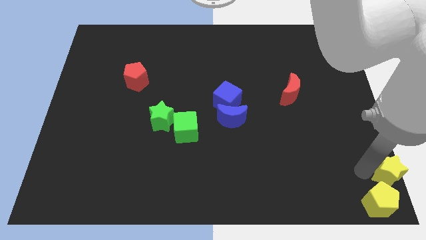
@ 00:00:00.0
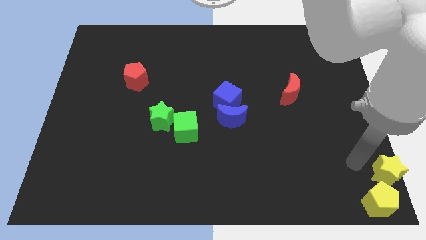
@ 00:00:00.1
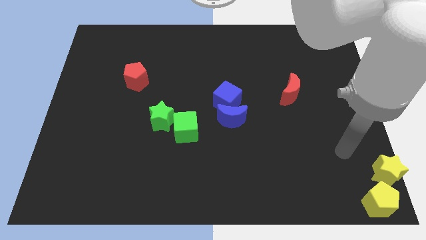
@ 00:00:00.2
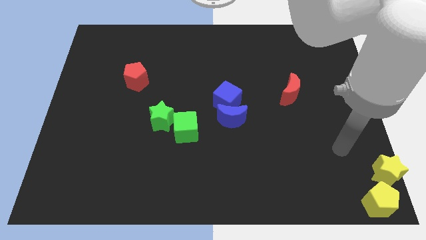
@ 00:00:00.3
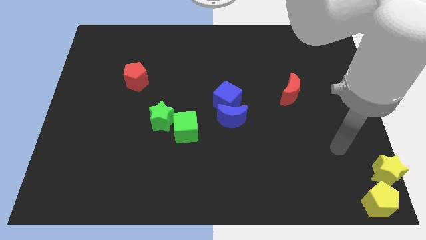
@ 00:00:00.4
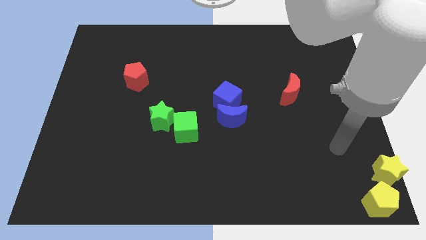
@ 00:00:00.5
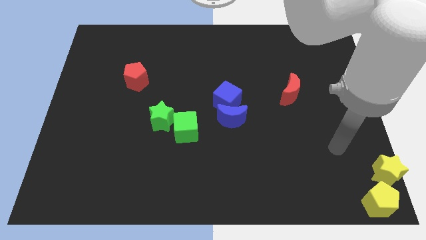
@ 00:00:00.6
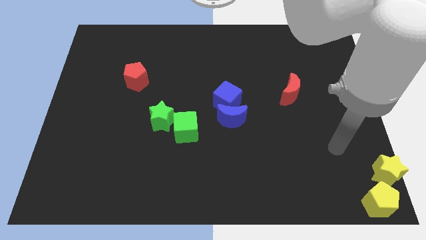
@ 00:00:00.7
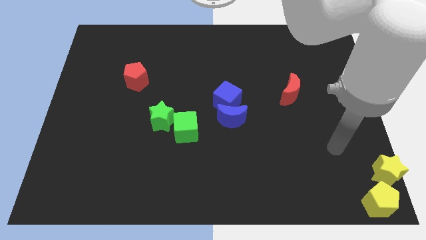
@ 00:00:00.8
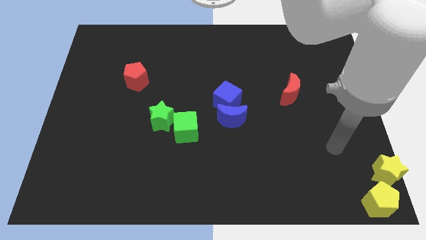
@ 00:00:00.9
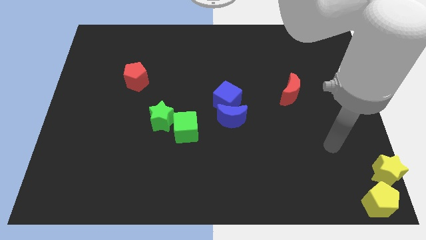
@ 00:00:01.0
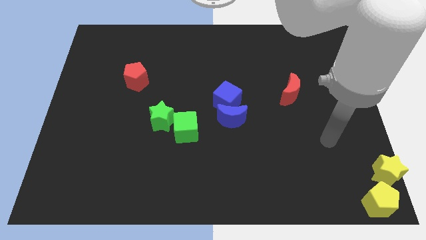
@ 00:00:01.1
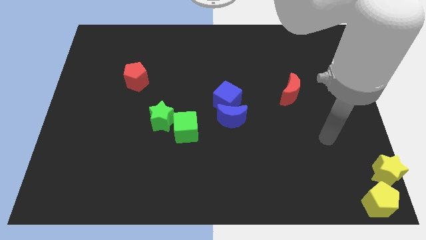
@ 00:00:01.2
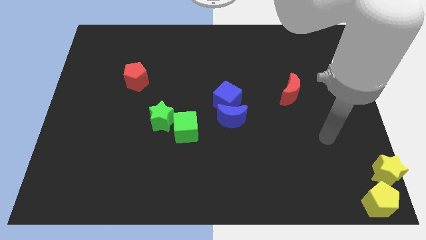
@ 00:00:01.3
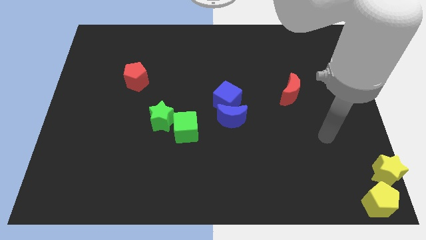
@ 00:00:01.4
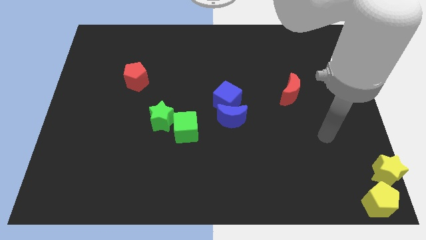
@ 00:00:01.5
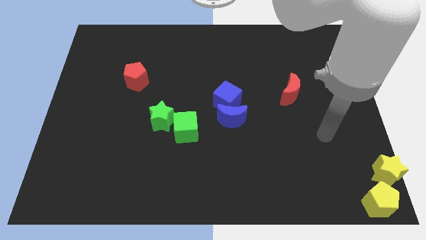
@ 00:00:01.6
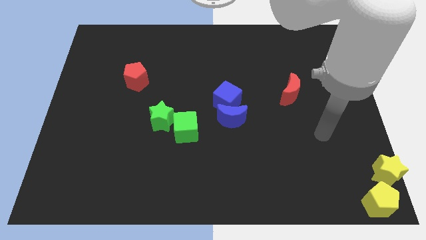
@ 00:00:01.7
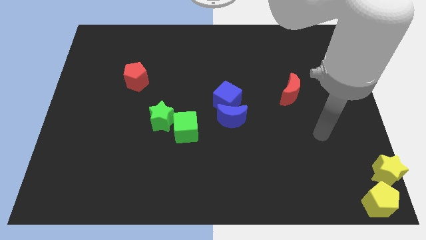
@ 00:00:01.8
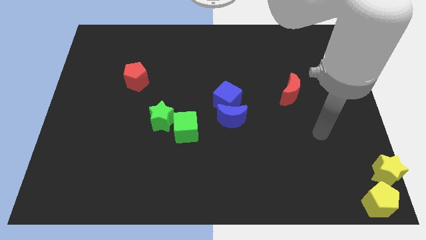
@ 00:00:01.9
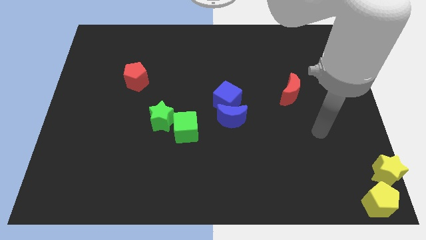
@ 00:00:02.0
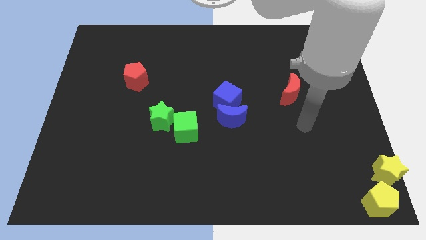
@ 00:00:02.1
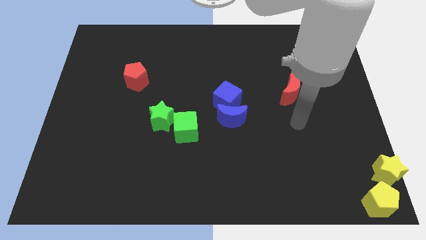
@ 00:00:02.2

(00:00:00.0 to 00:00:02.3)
move your arm away from the yellow star

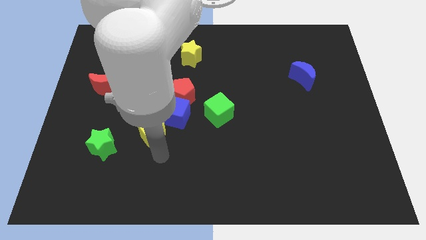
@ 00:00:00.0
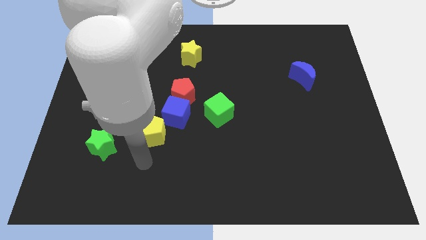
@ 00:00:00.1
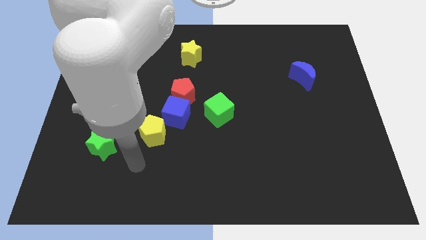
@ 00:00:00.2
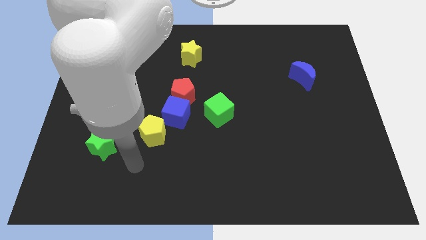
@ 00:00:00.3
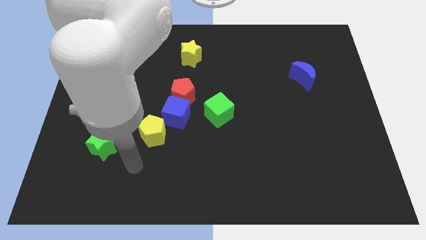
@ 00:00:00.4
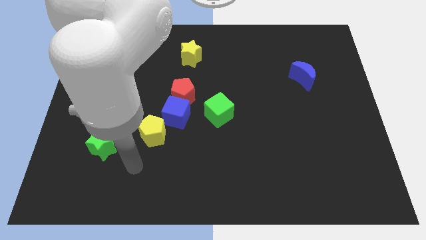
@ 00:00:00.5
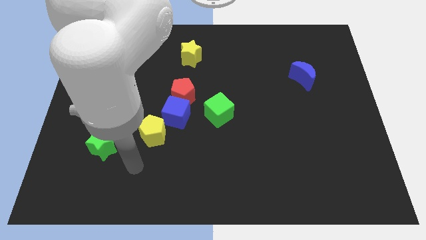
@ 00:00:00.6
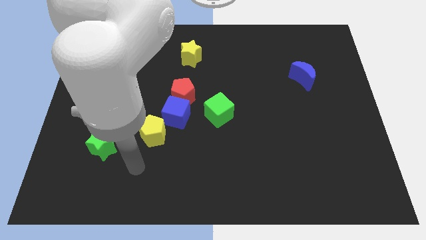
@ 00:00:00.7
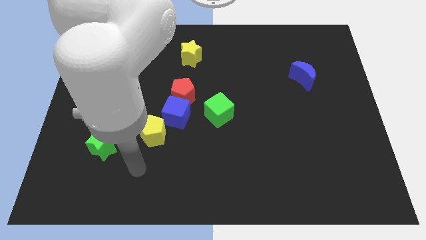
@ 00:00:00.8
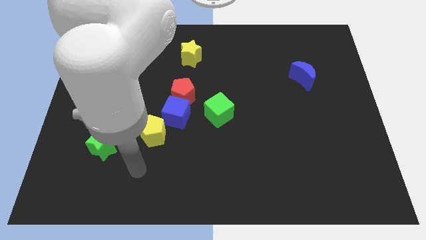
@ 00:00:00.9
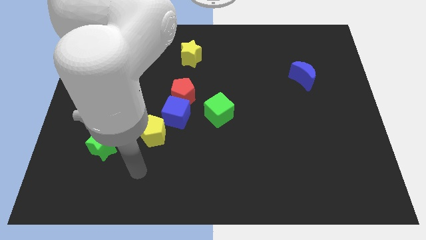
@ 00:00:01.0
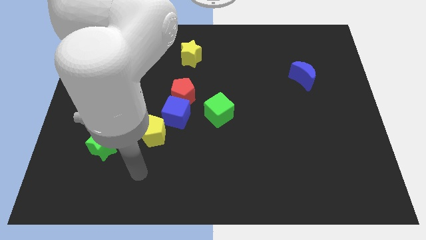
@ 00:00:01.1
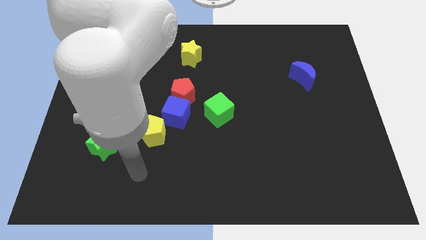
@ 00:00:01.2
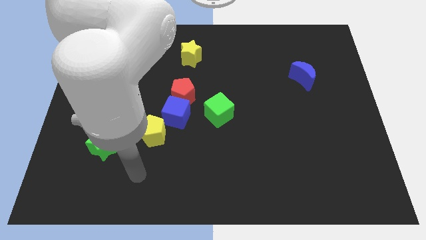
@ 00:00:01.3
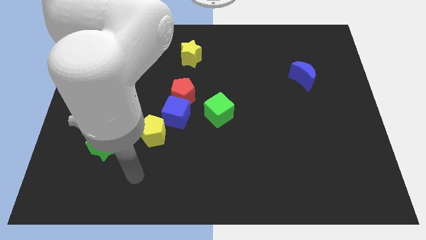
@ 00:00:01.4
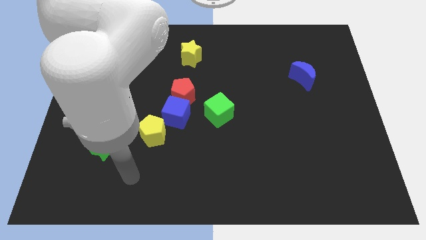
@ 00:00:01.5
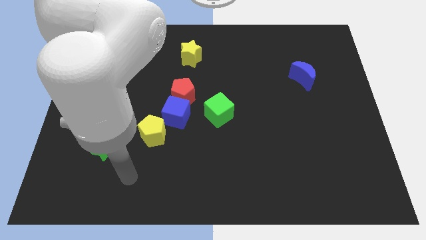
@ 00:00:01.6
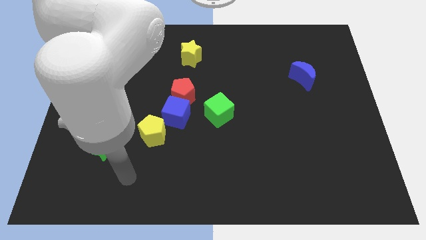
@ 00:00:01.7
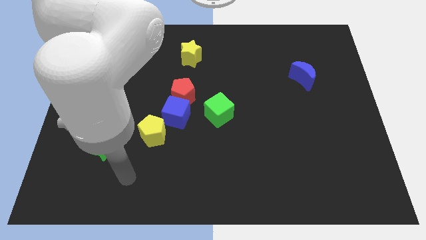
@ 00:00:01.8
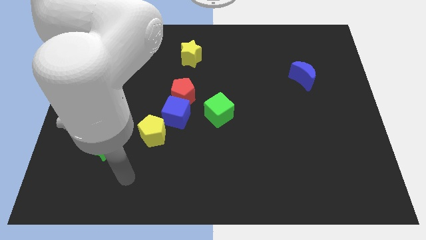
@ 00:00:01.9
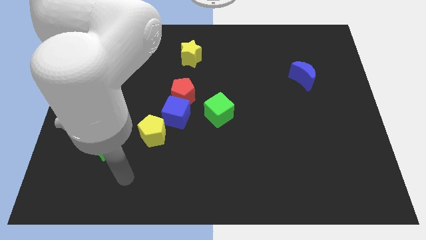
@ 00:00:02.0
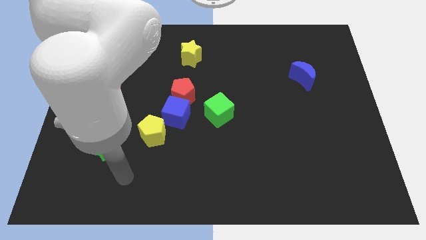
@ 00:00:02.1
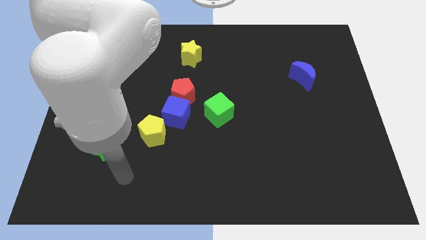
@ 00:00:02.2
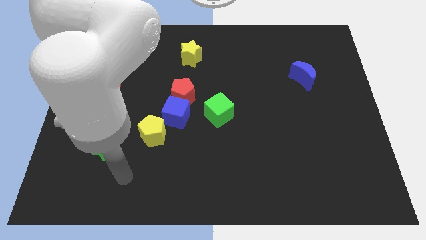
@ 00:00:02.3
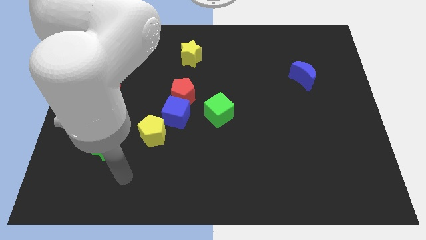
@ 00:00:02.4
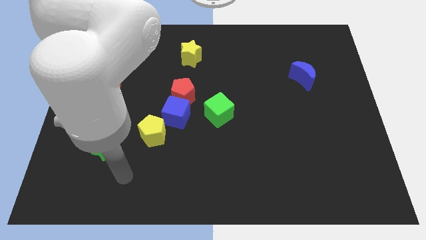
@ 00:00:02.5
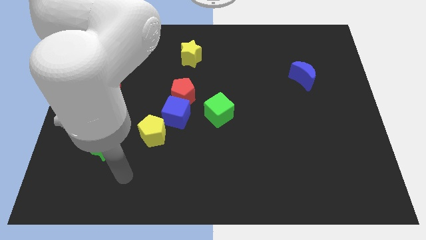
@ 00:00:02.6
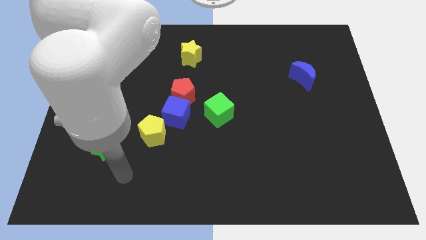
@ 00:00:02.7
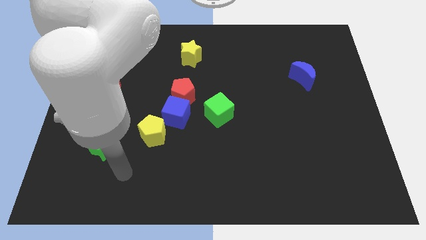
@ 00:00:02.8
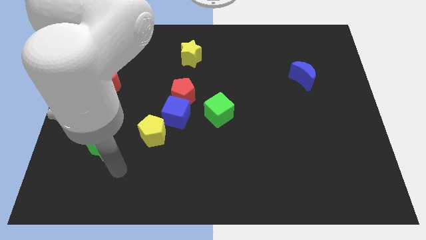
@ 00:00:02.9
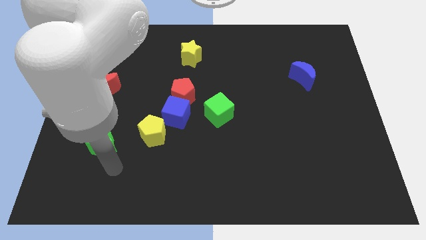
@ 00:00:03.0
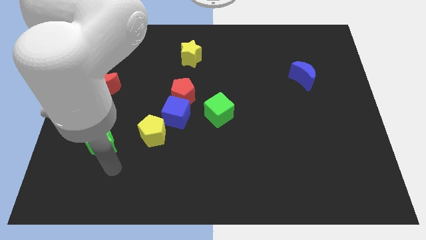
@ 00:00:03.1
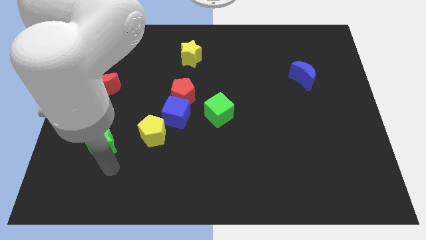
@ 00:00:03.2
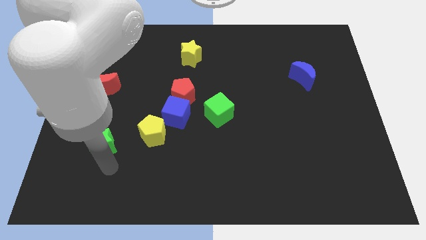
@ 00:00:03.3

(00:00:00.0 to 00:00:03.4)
place the arm to the bottom of the green star

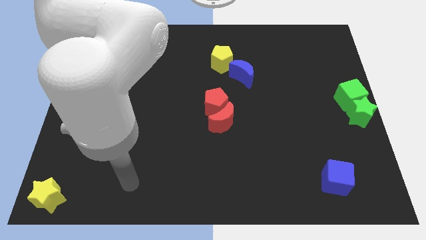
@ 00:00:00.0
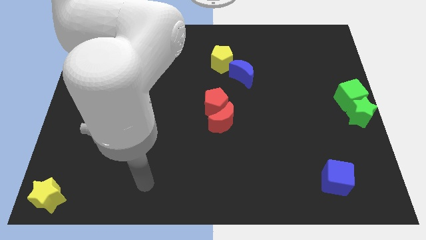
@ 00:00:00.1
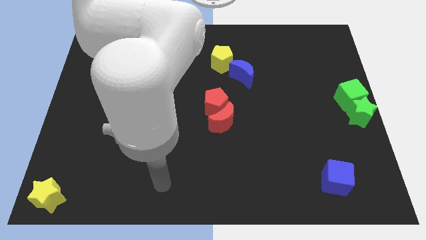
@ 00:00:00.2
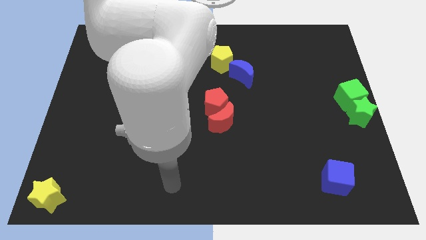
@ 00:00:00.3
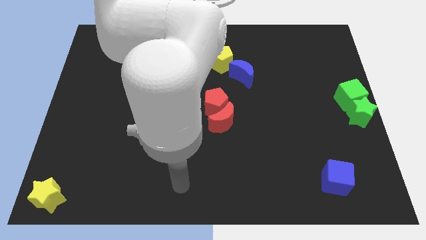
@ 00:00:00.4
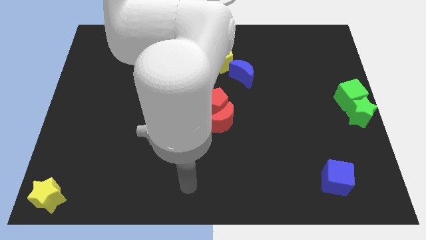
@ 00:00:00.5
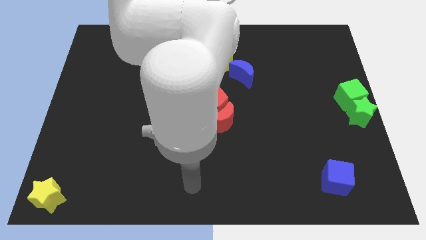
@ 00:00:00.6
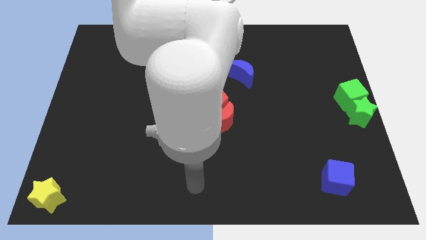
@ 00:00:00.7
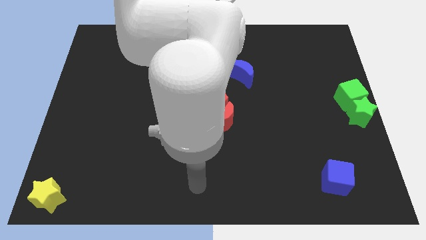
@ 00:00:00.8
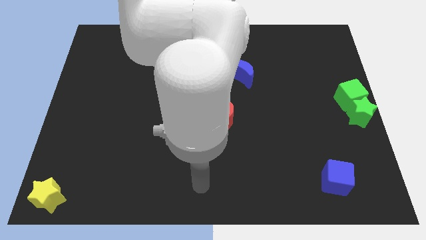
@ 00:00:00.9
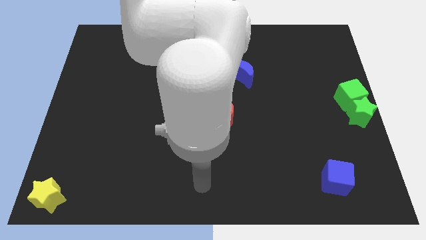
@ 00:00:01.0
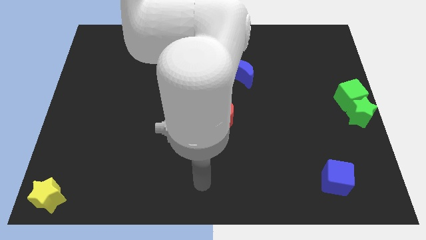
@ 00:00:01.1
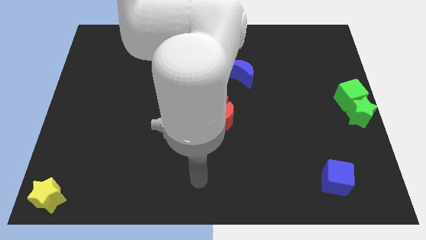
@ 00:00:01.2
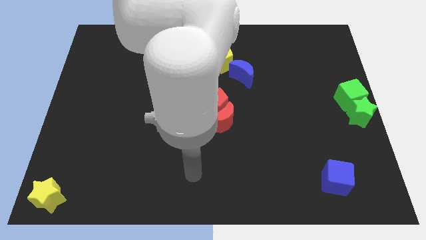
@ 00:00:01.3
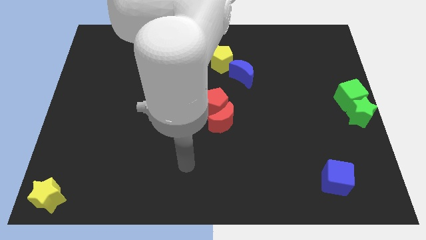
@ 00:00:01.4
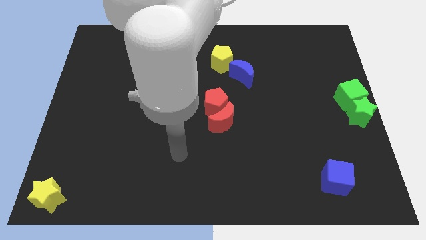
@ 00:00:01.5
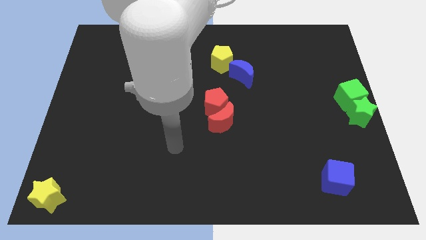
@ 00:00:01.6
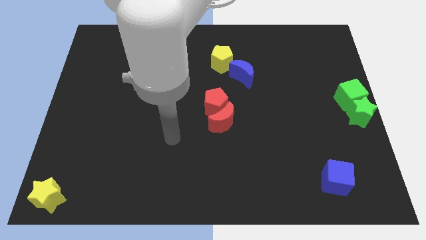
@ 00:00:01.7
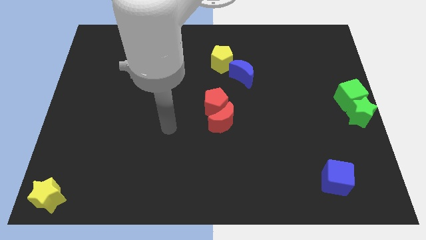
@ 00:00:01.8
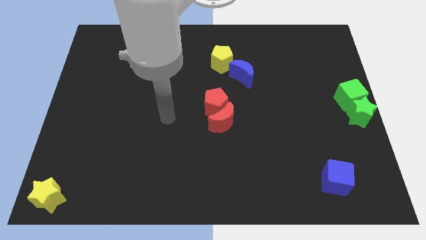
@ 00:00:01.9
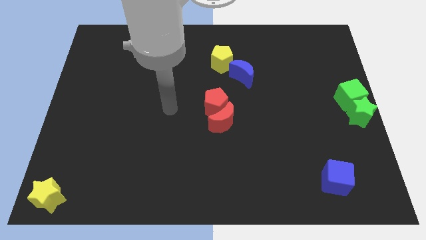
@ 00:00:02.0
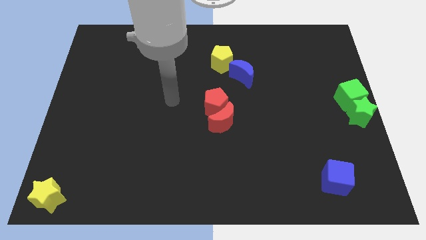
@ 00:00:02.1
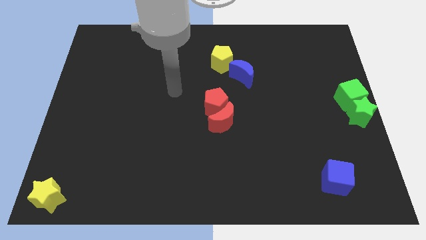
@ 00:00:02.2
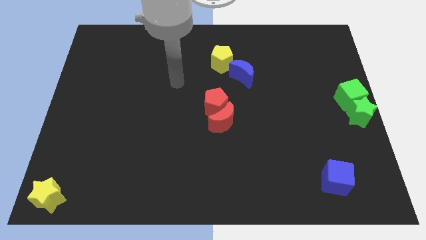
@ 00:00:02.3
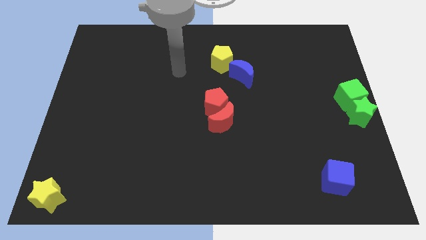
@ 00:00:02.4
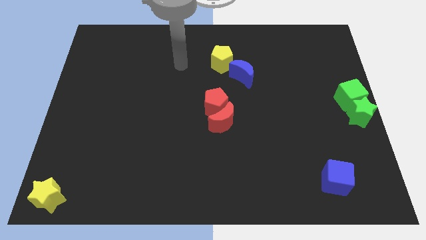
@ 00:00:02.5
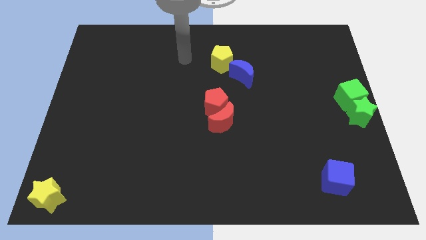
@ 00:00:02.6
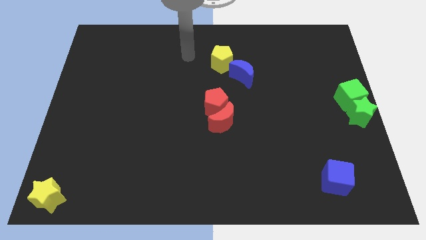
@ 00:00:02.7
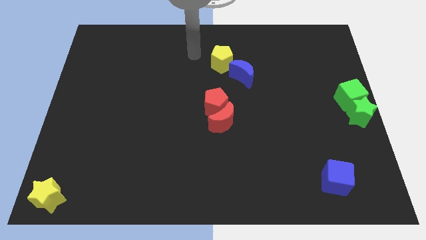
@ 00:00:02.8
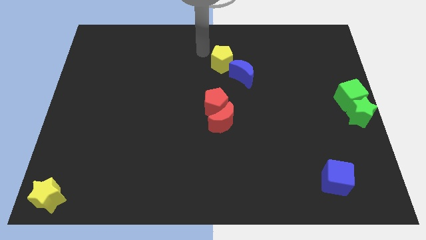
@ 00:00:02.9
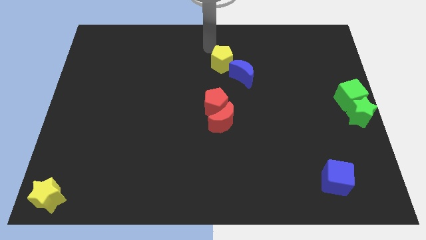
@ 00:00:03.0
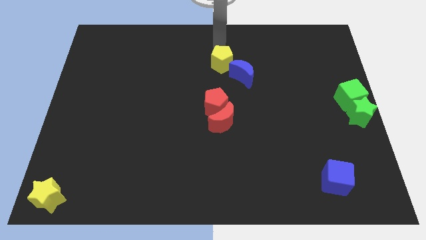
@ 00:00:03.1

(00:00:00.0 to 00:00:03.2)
move your arm to the top of the yellow pentagon
